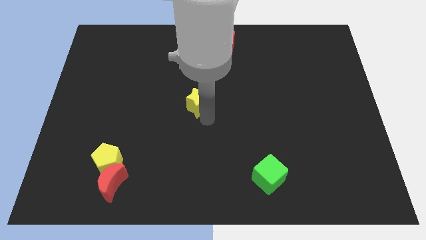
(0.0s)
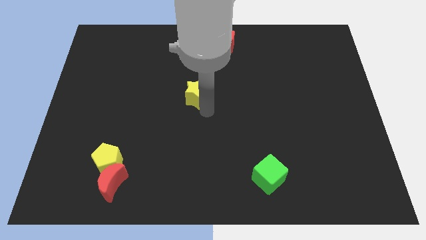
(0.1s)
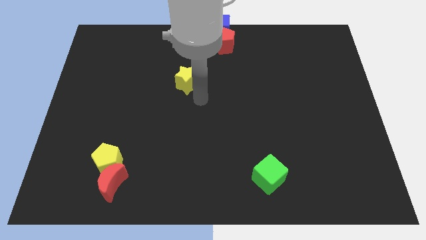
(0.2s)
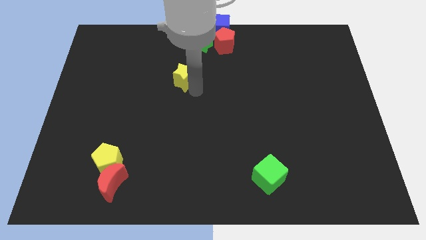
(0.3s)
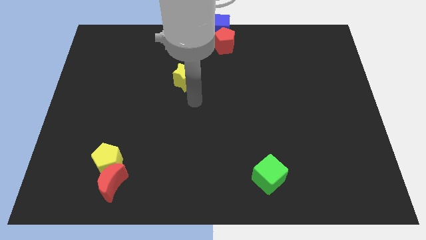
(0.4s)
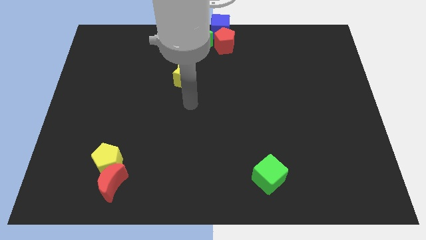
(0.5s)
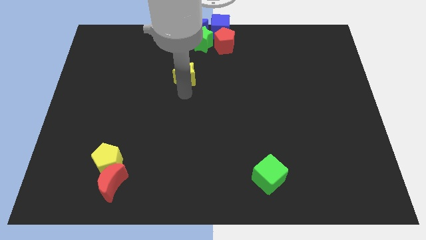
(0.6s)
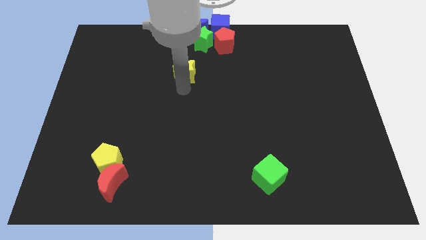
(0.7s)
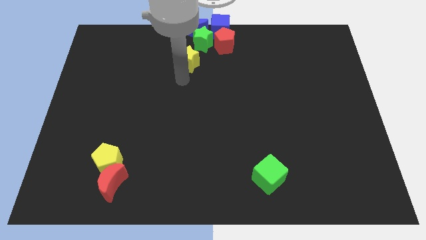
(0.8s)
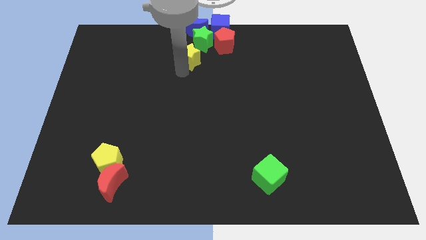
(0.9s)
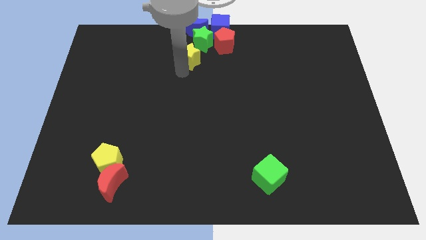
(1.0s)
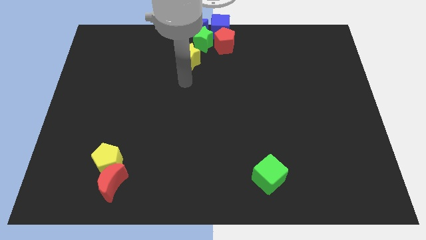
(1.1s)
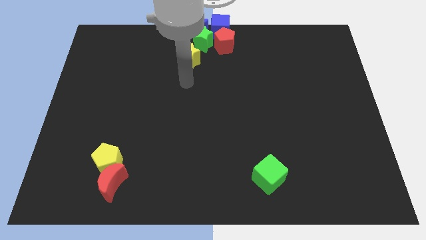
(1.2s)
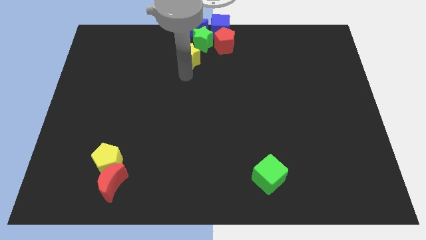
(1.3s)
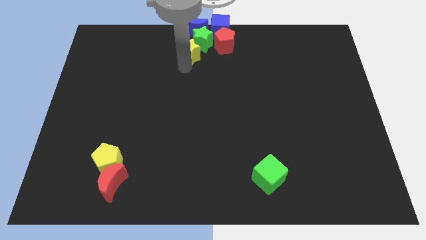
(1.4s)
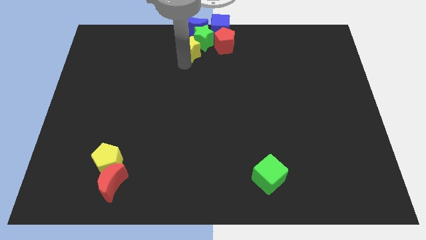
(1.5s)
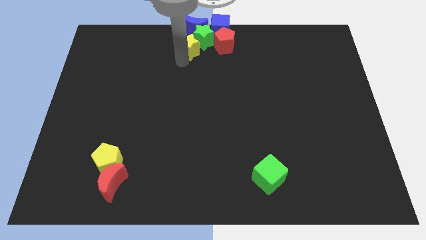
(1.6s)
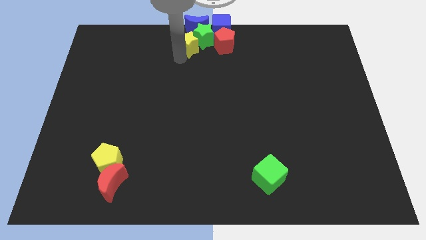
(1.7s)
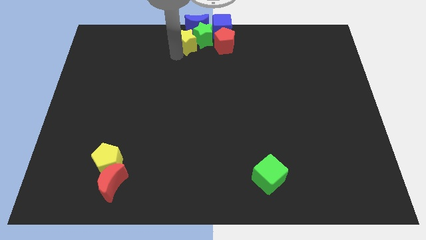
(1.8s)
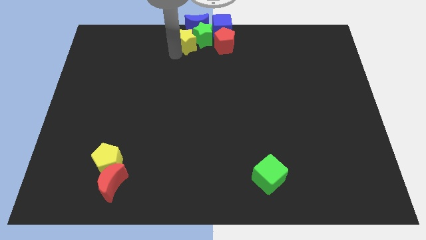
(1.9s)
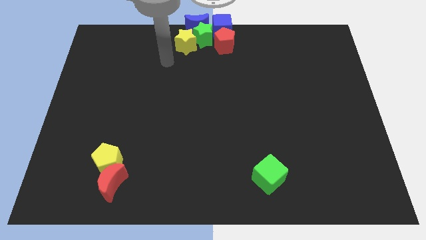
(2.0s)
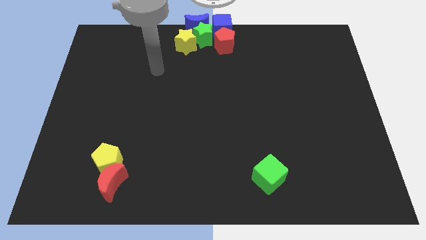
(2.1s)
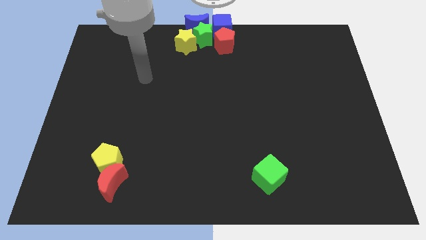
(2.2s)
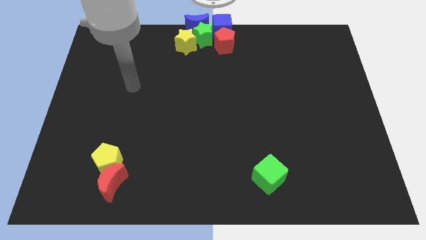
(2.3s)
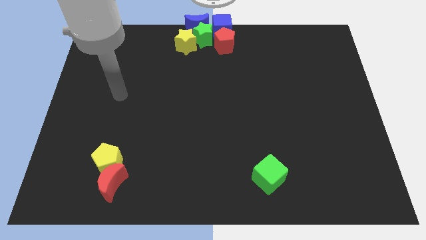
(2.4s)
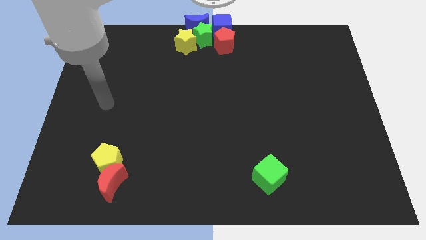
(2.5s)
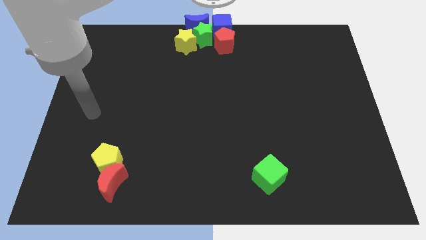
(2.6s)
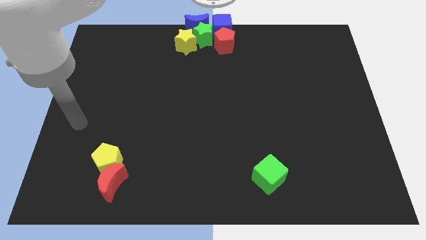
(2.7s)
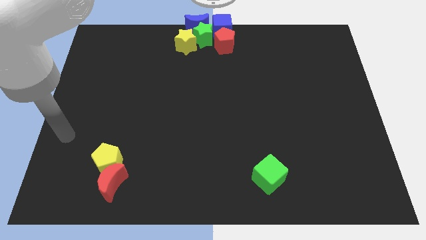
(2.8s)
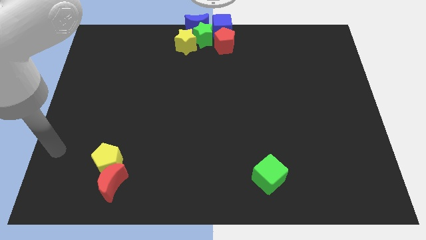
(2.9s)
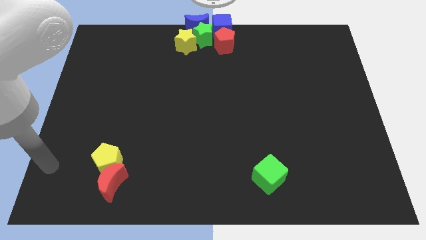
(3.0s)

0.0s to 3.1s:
move the yellow star into the bottom left of the green star

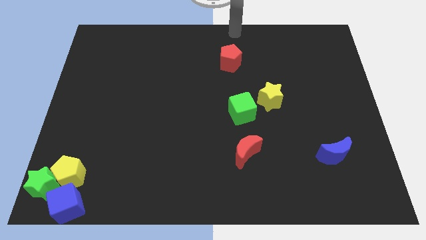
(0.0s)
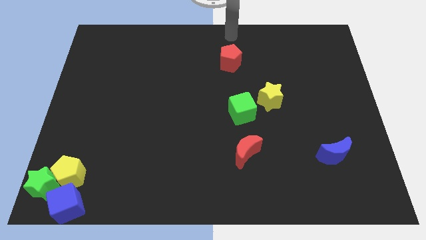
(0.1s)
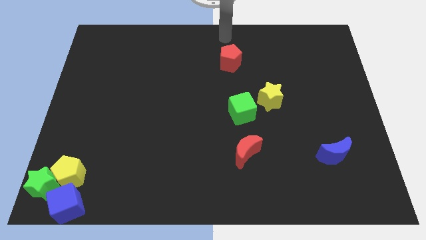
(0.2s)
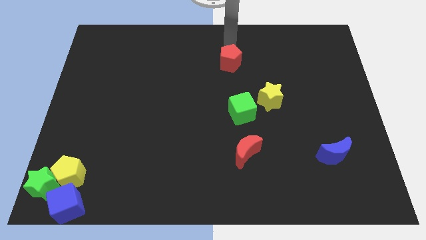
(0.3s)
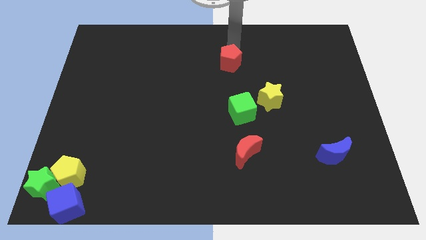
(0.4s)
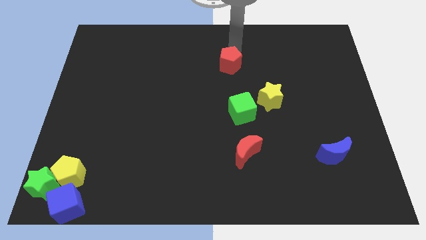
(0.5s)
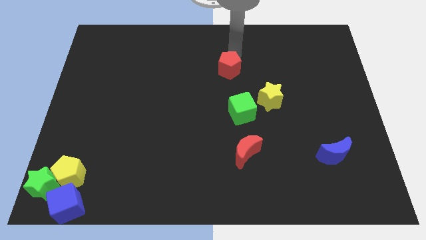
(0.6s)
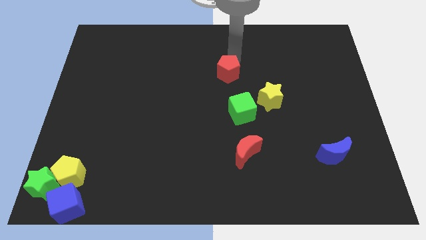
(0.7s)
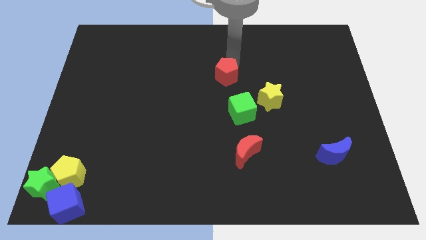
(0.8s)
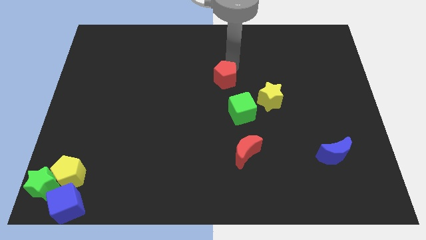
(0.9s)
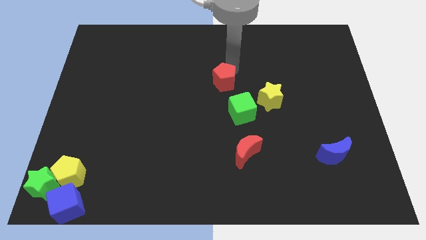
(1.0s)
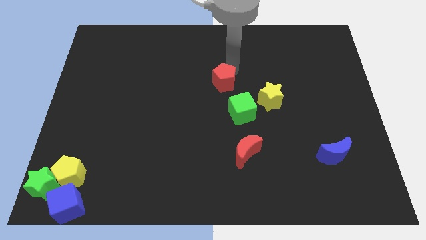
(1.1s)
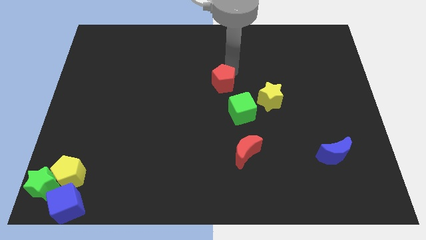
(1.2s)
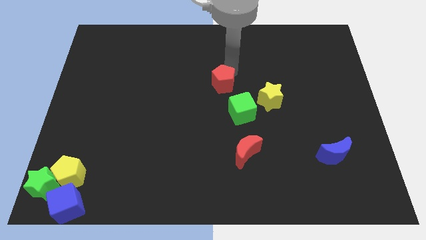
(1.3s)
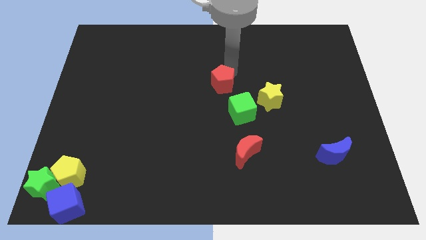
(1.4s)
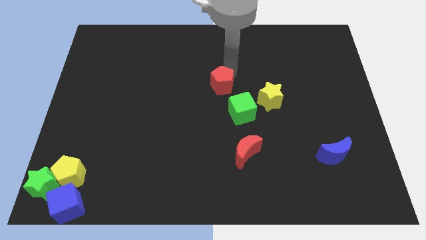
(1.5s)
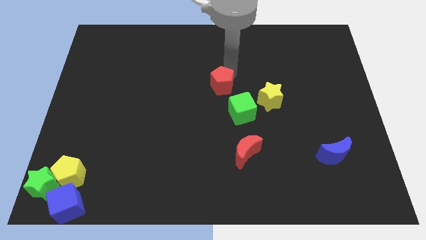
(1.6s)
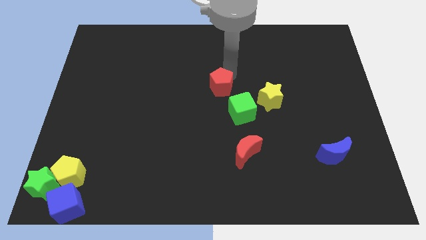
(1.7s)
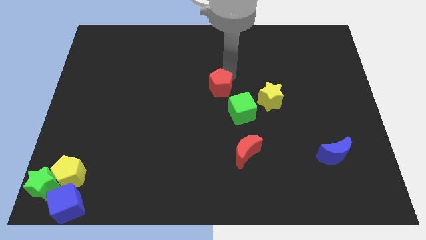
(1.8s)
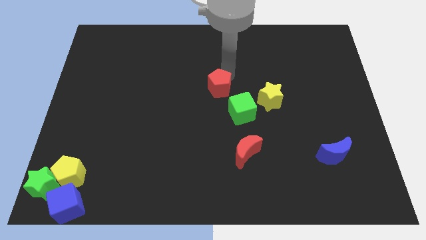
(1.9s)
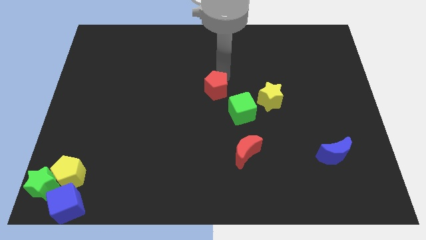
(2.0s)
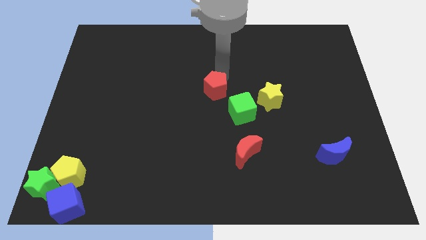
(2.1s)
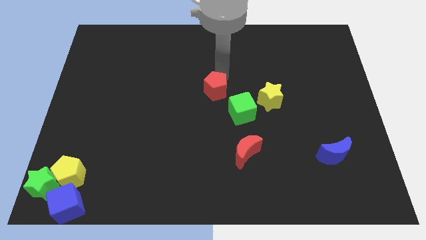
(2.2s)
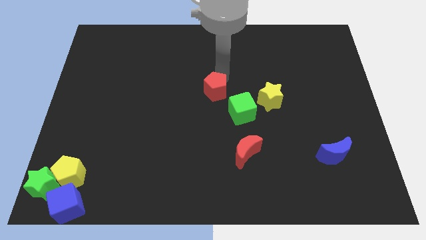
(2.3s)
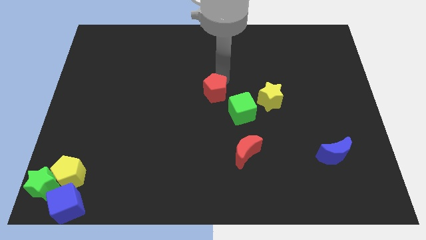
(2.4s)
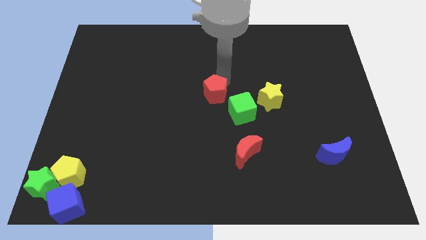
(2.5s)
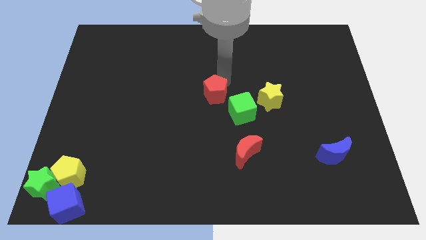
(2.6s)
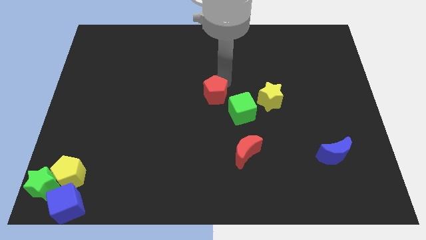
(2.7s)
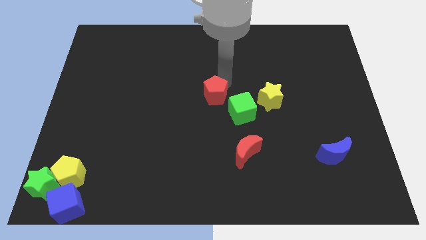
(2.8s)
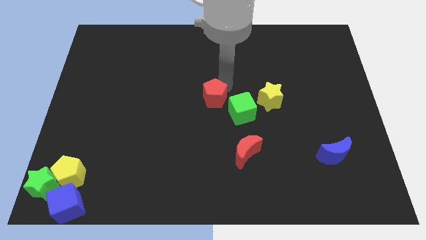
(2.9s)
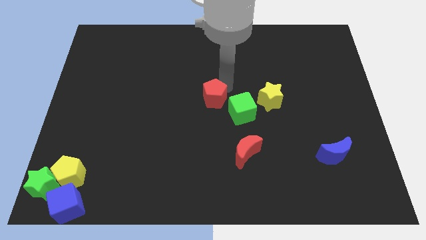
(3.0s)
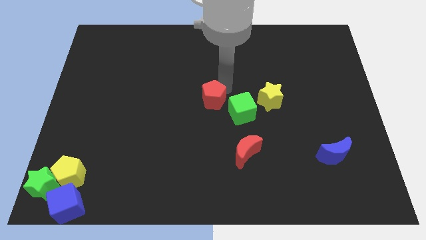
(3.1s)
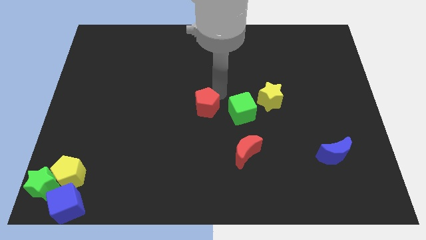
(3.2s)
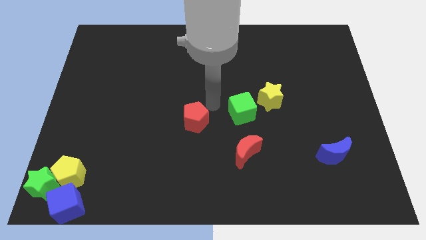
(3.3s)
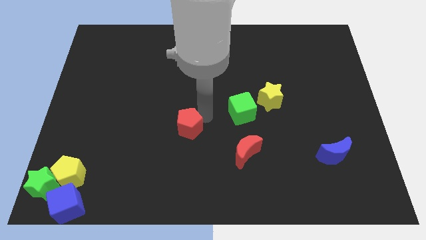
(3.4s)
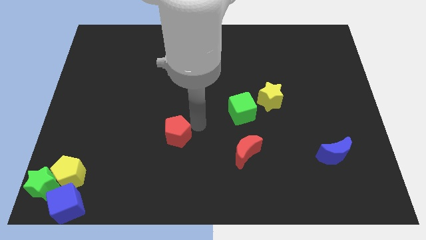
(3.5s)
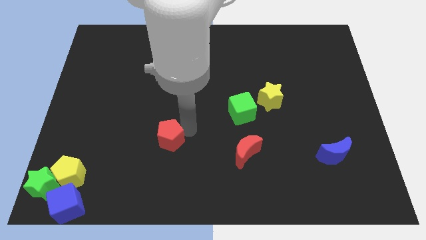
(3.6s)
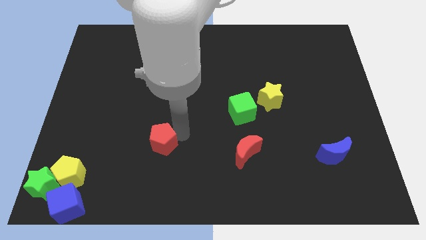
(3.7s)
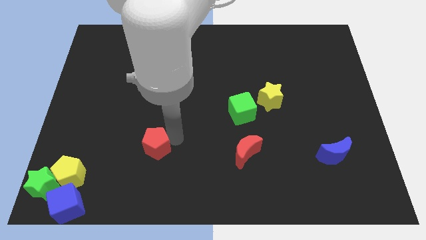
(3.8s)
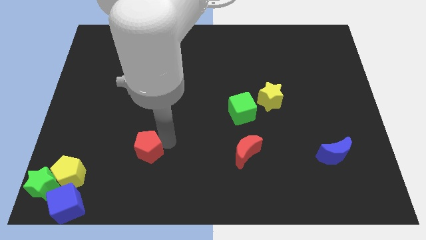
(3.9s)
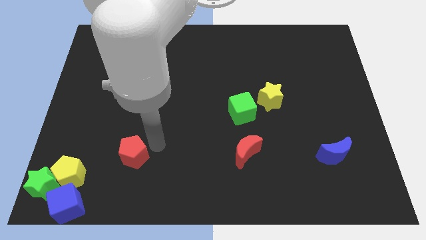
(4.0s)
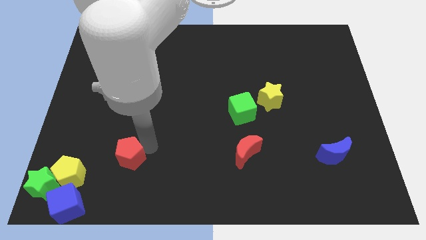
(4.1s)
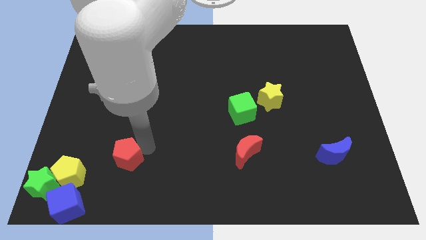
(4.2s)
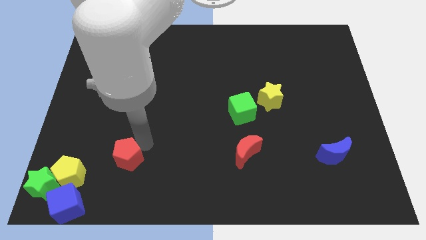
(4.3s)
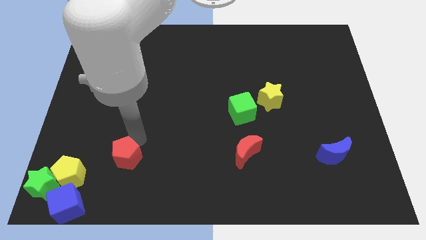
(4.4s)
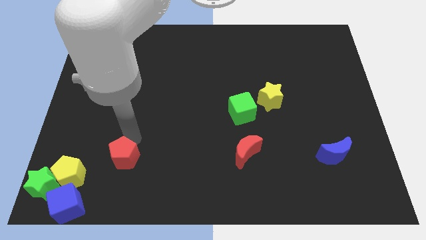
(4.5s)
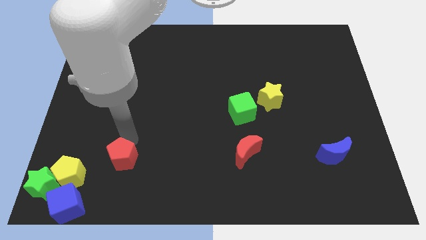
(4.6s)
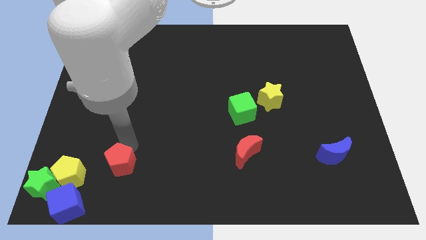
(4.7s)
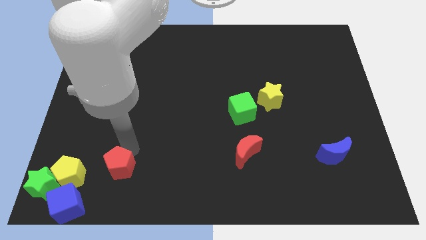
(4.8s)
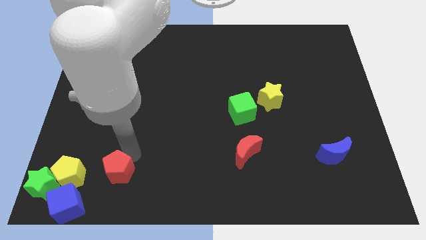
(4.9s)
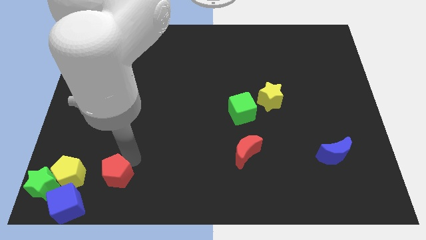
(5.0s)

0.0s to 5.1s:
slide red pentagon parallel to yellow pentagon

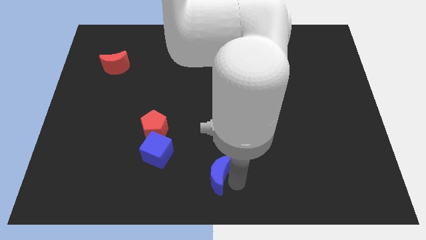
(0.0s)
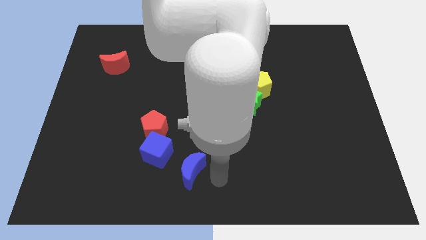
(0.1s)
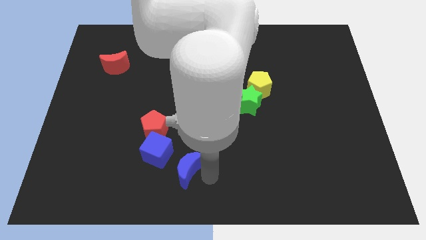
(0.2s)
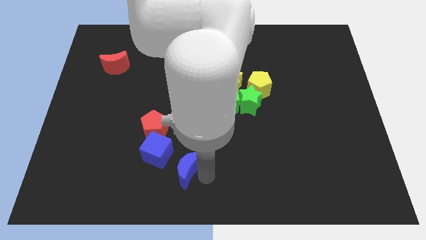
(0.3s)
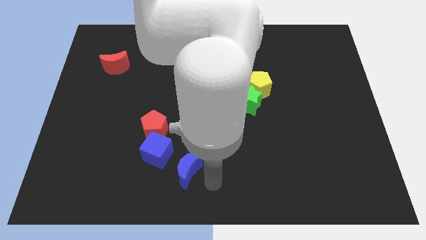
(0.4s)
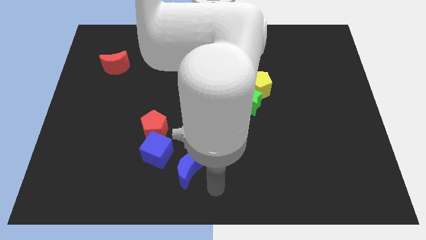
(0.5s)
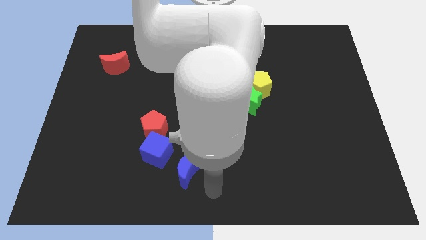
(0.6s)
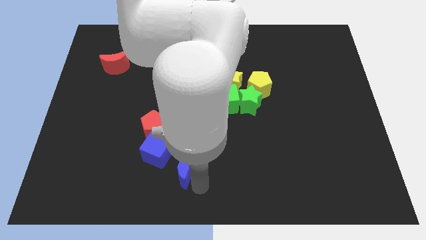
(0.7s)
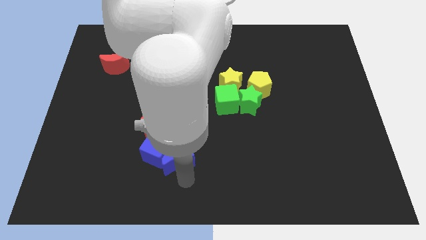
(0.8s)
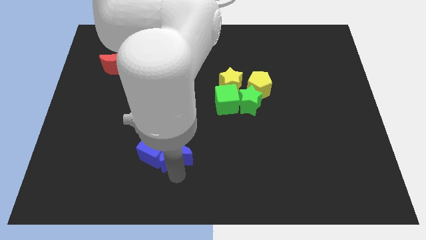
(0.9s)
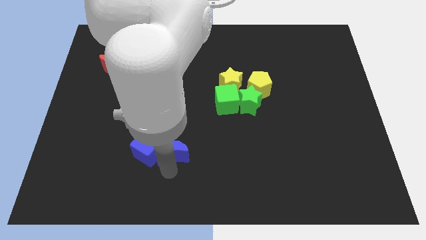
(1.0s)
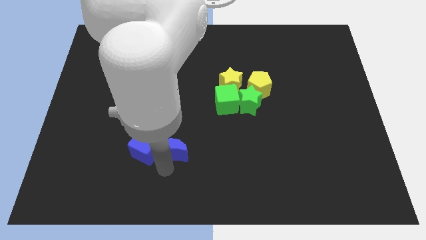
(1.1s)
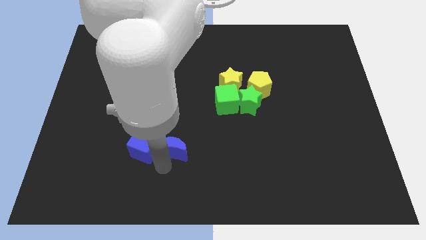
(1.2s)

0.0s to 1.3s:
push blue moon into blue cube
